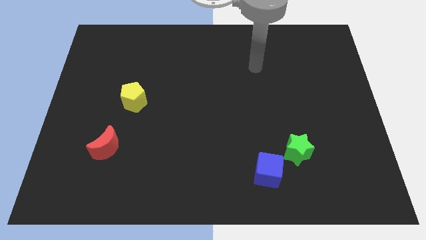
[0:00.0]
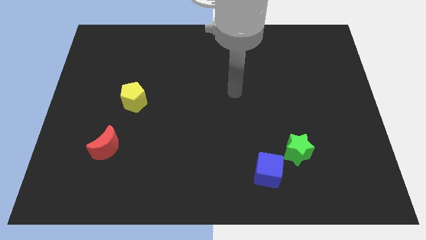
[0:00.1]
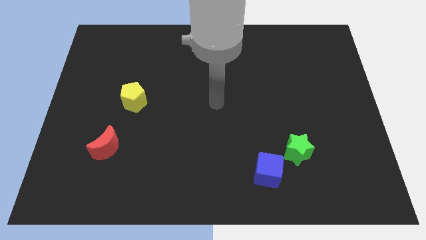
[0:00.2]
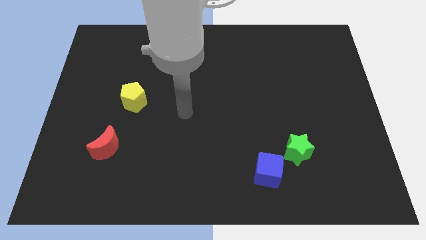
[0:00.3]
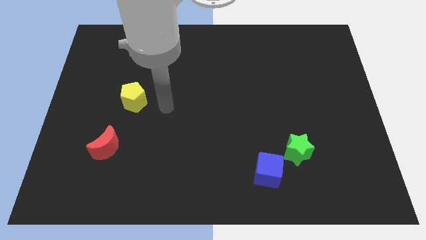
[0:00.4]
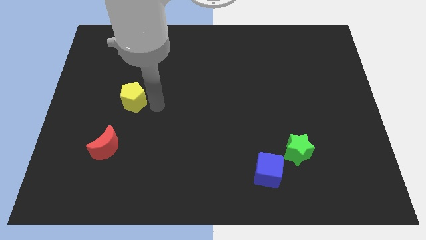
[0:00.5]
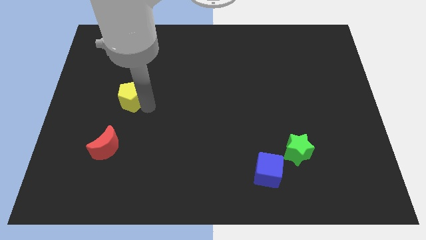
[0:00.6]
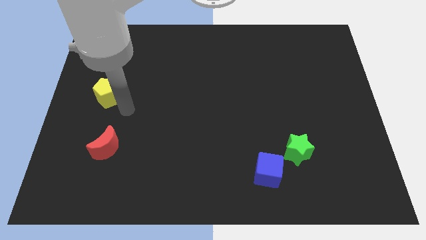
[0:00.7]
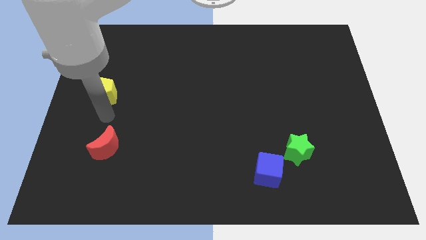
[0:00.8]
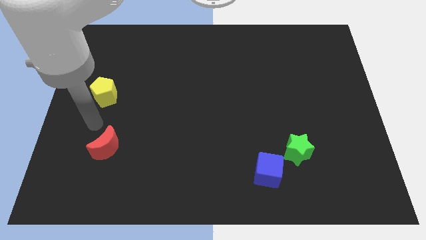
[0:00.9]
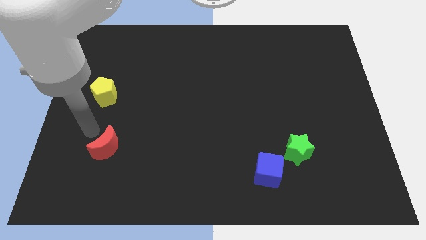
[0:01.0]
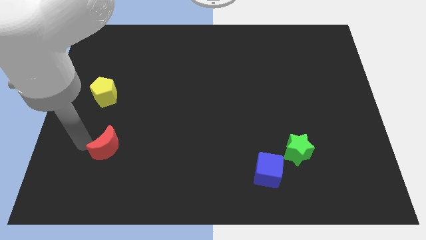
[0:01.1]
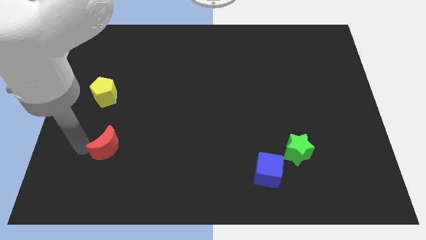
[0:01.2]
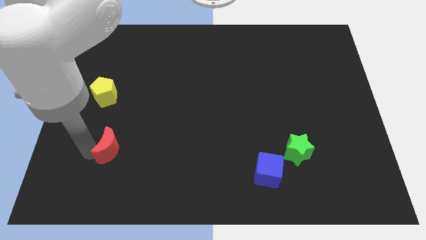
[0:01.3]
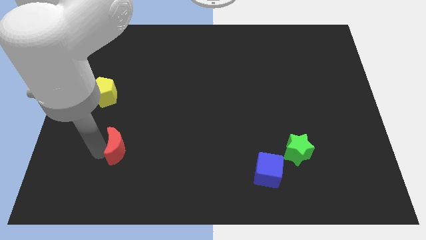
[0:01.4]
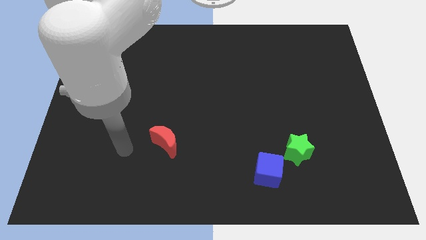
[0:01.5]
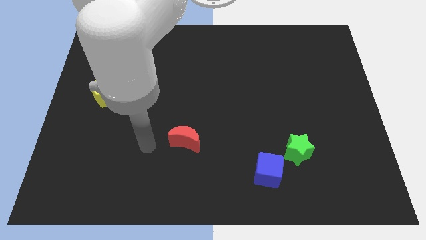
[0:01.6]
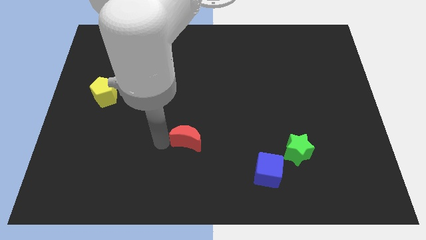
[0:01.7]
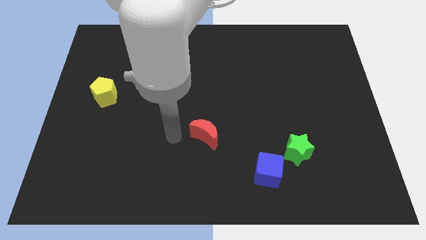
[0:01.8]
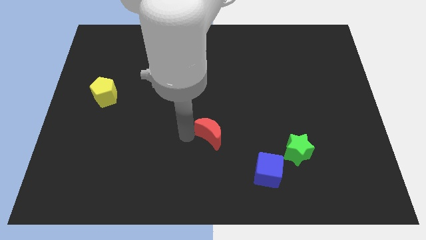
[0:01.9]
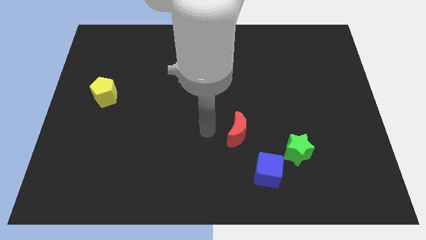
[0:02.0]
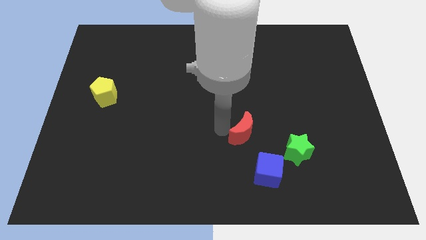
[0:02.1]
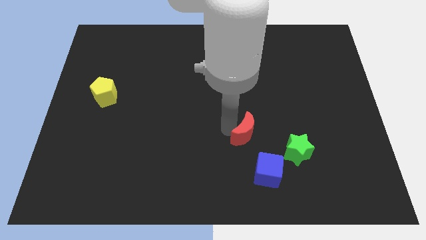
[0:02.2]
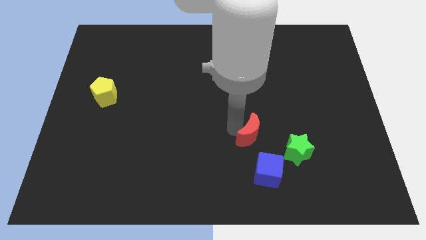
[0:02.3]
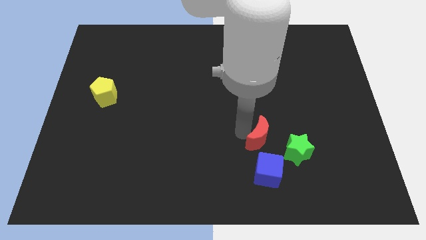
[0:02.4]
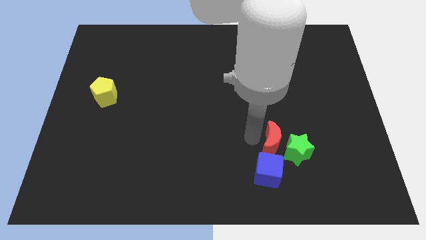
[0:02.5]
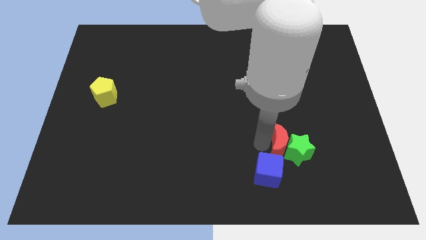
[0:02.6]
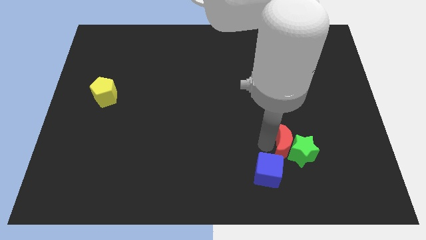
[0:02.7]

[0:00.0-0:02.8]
push the moon to the star

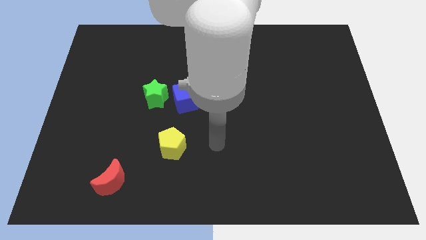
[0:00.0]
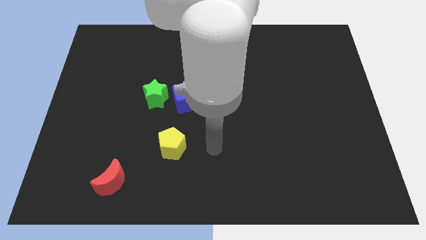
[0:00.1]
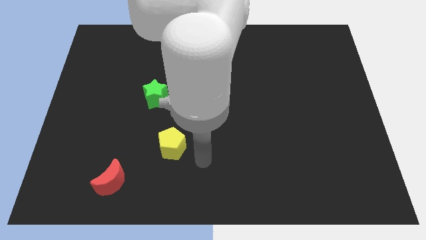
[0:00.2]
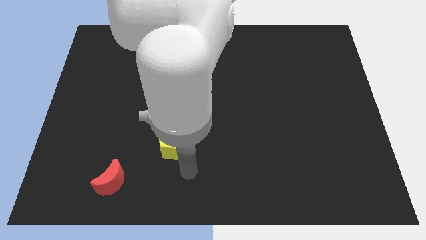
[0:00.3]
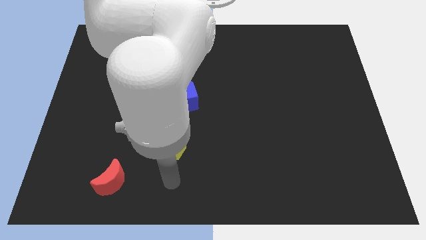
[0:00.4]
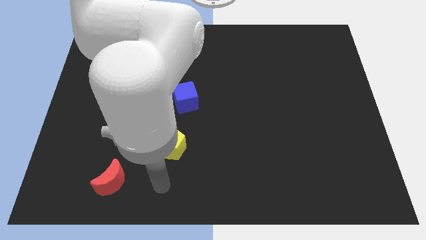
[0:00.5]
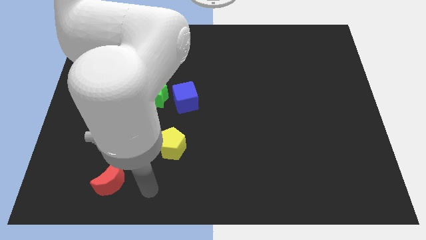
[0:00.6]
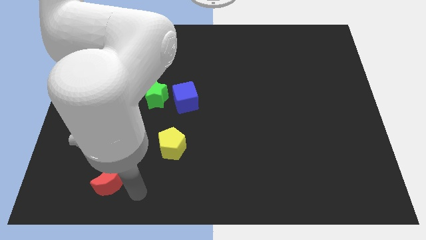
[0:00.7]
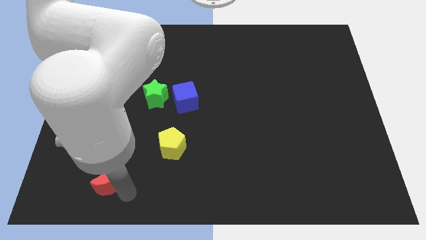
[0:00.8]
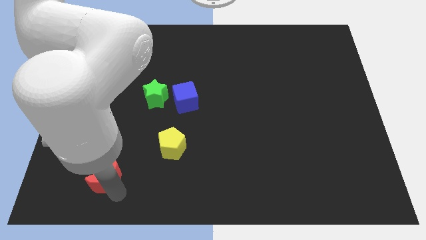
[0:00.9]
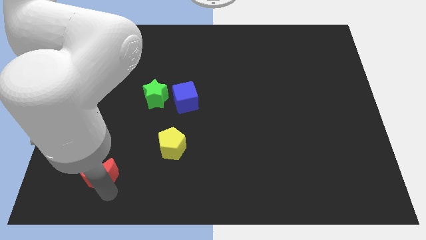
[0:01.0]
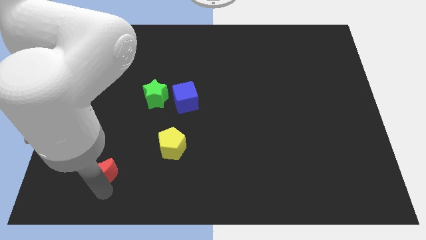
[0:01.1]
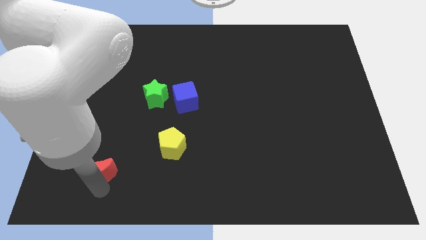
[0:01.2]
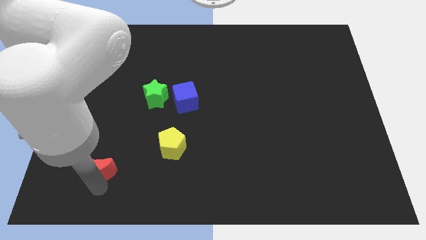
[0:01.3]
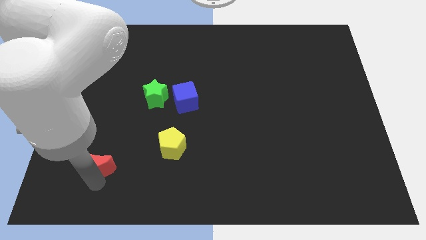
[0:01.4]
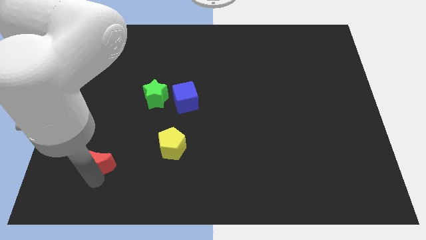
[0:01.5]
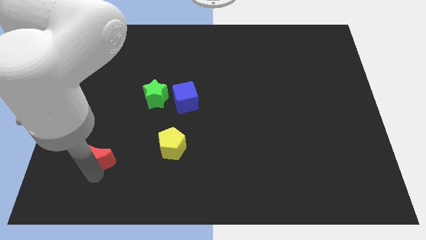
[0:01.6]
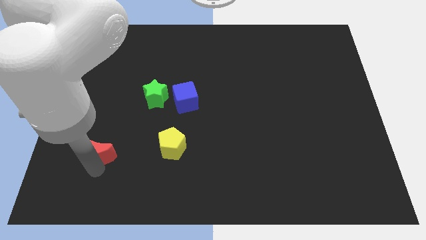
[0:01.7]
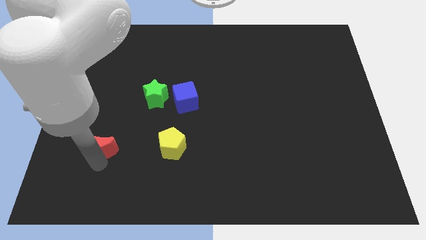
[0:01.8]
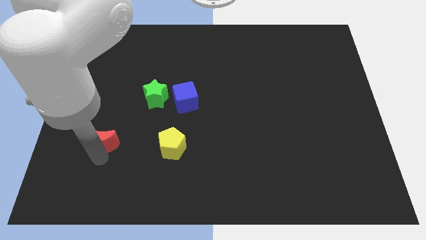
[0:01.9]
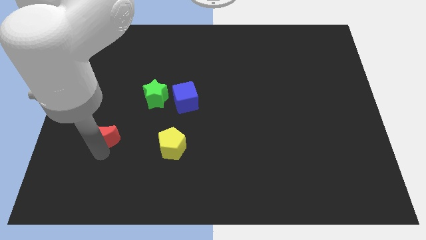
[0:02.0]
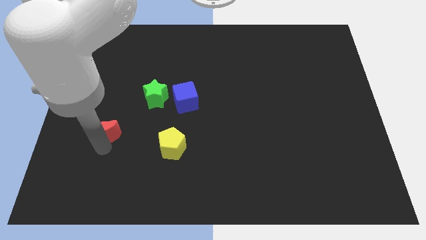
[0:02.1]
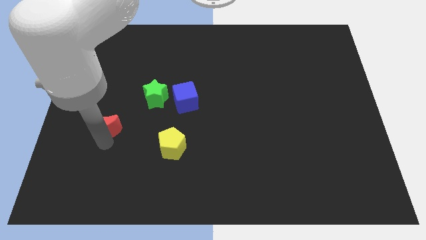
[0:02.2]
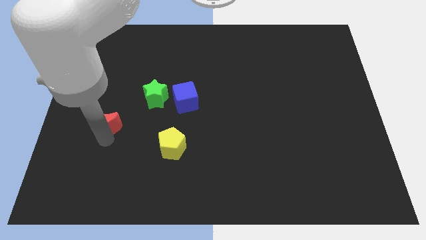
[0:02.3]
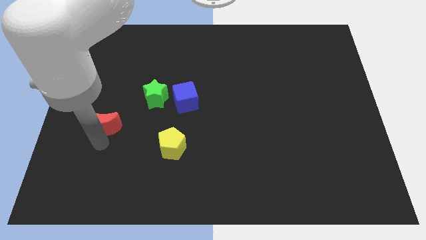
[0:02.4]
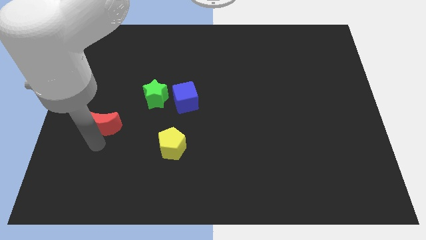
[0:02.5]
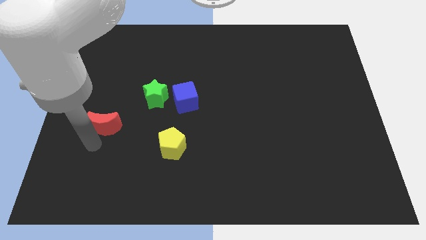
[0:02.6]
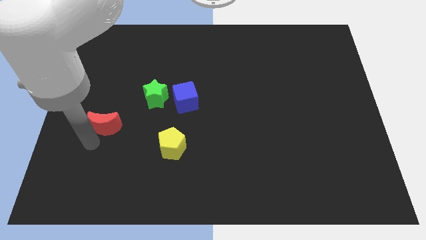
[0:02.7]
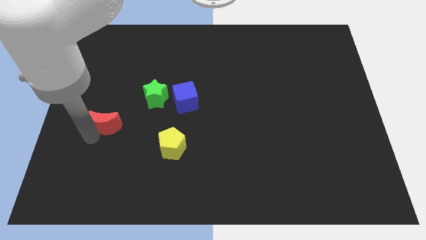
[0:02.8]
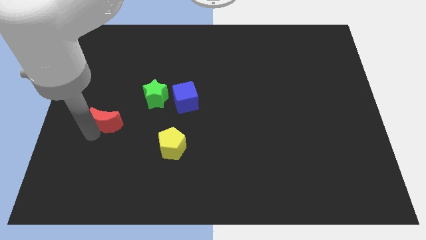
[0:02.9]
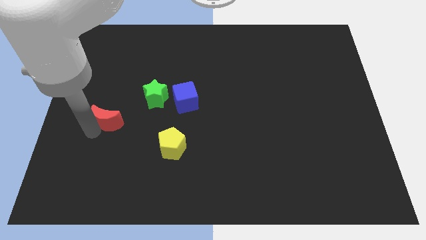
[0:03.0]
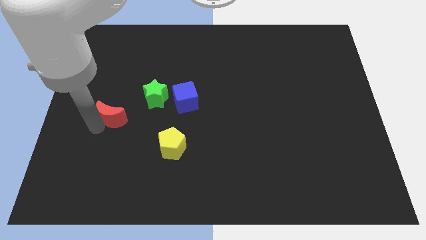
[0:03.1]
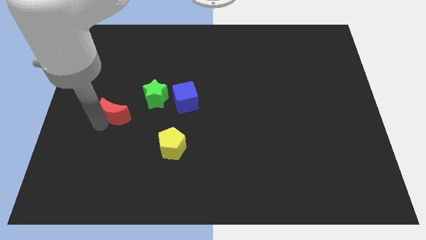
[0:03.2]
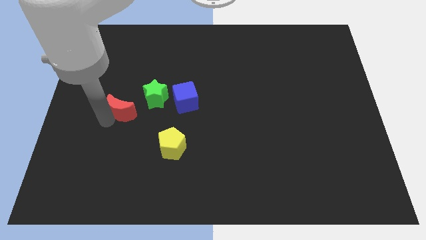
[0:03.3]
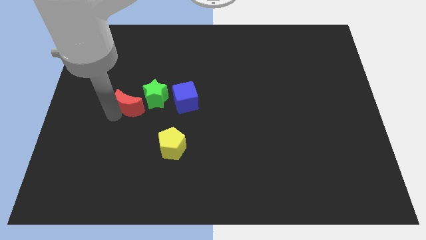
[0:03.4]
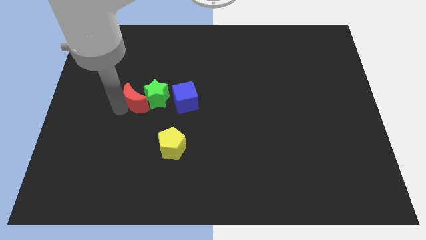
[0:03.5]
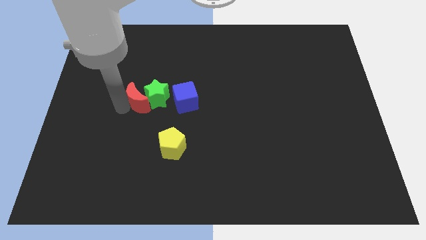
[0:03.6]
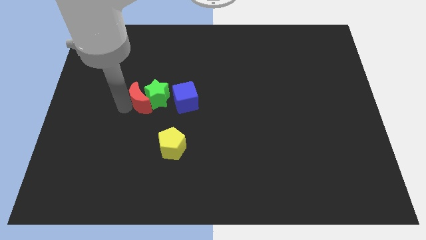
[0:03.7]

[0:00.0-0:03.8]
put the red block to the green star

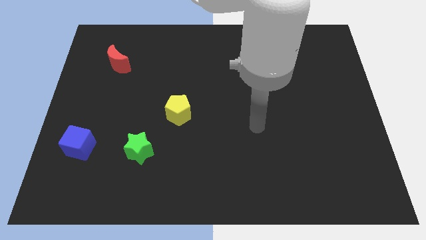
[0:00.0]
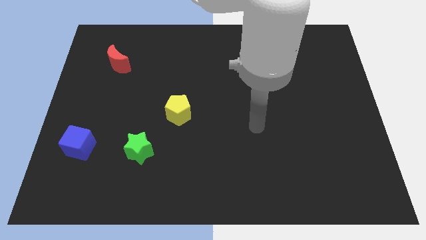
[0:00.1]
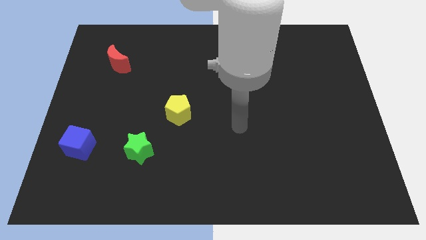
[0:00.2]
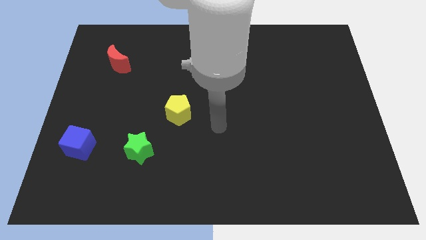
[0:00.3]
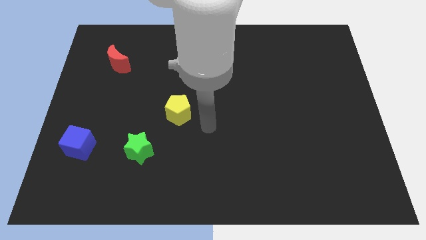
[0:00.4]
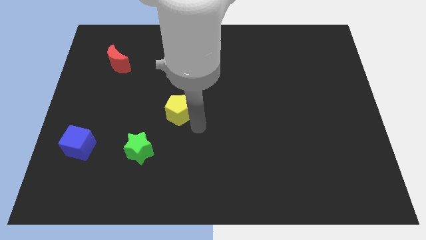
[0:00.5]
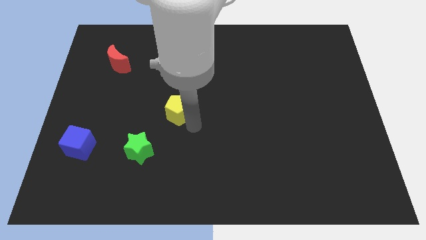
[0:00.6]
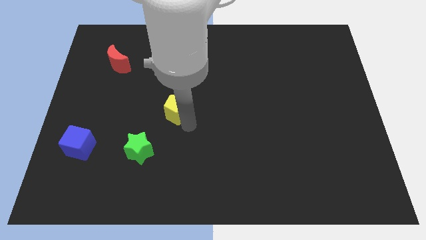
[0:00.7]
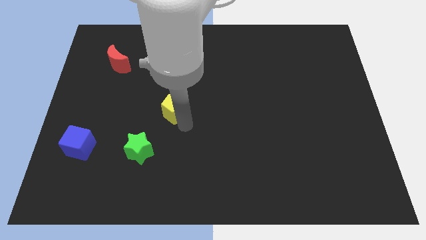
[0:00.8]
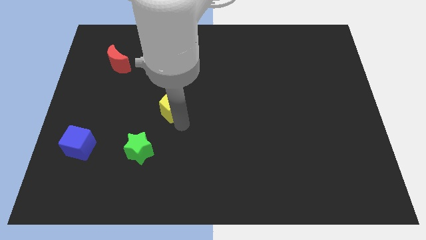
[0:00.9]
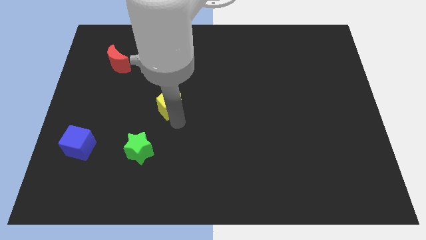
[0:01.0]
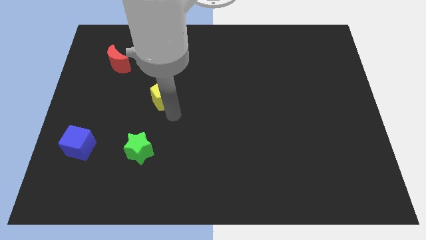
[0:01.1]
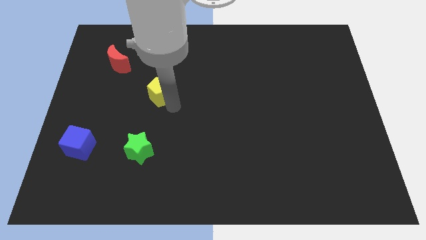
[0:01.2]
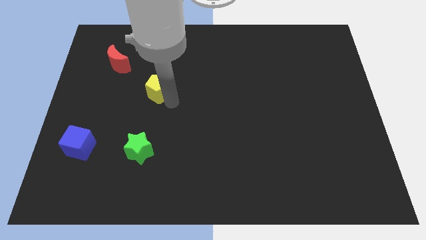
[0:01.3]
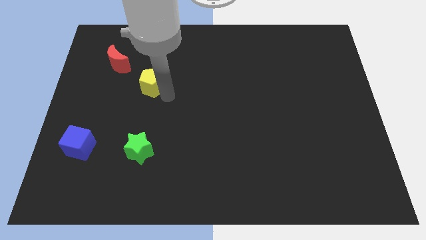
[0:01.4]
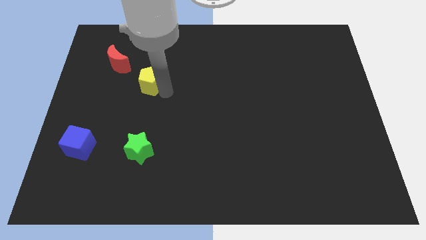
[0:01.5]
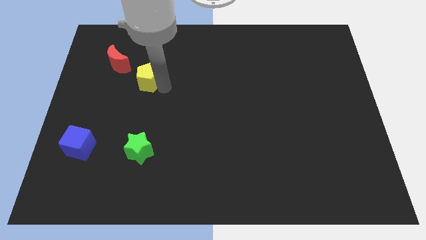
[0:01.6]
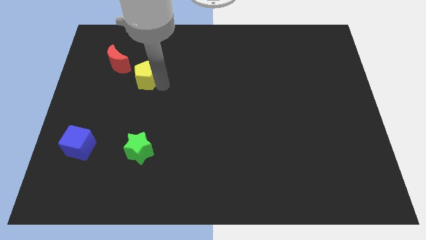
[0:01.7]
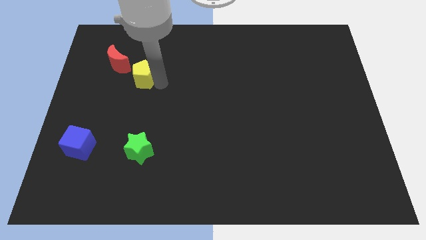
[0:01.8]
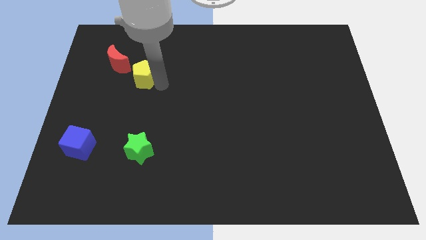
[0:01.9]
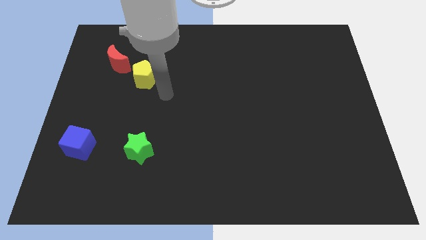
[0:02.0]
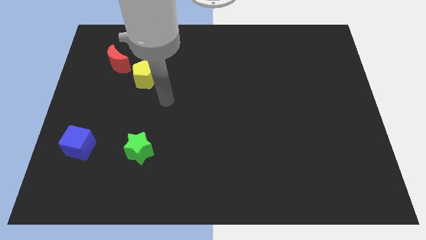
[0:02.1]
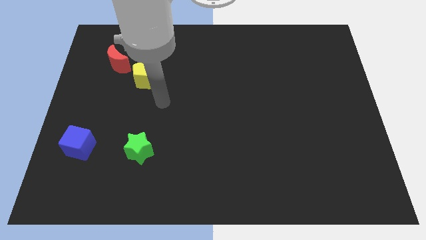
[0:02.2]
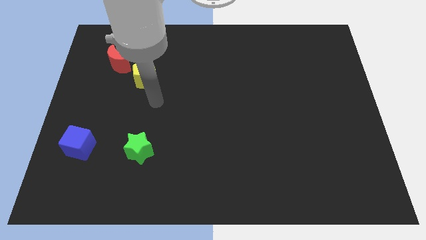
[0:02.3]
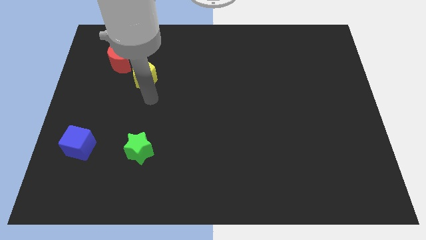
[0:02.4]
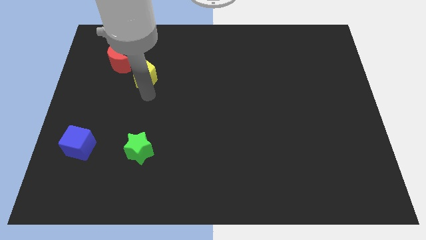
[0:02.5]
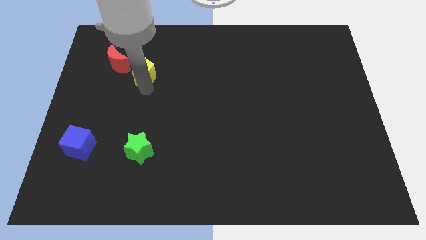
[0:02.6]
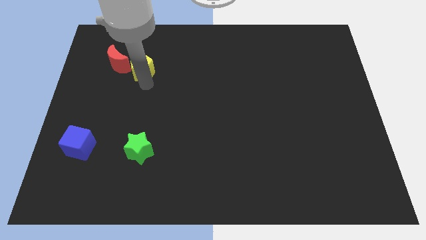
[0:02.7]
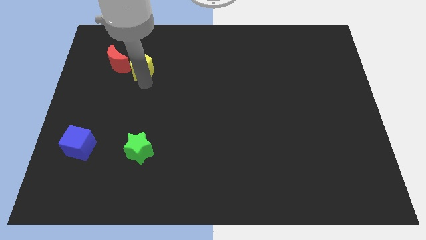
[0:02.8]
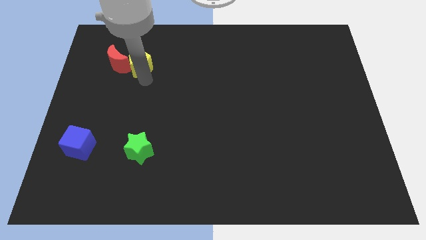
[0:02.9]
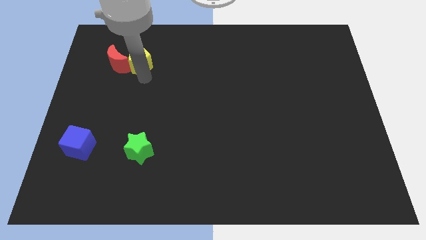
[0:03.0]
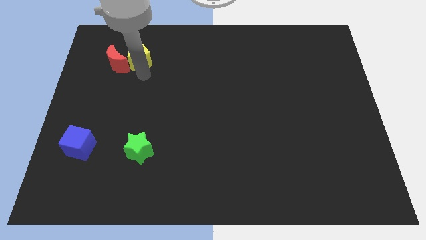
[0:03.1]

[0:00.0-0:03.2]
slide the pentagon close to the red block
